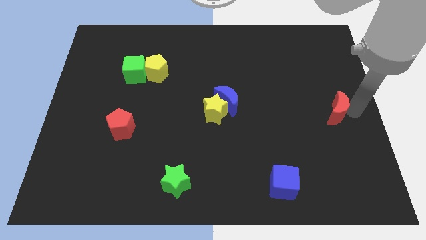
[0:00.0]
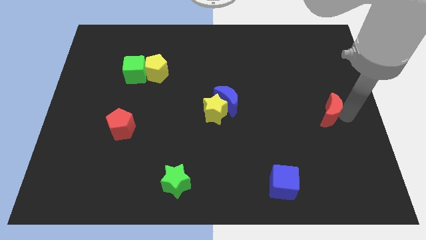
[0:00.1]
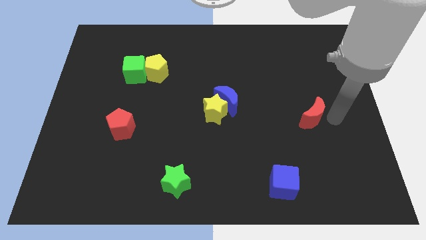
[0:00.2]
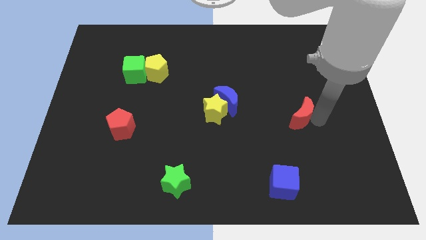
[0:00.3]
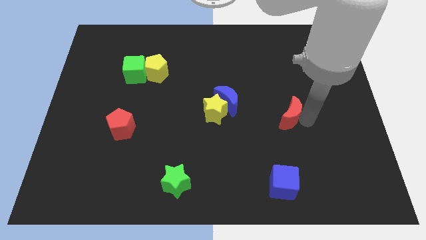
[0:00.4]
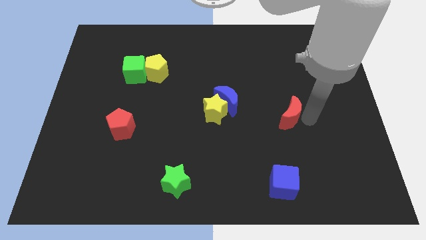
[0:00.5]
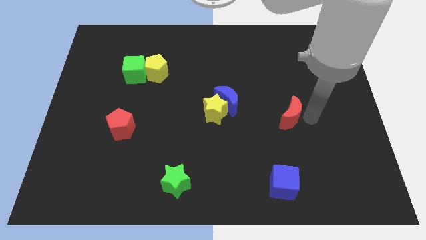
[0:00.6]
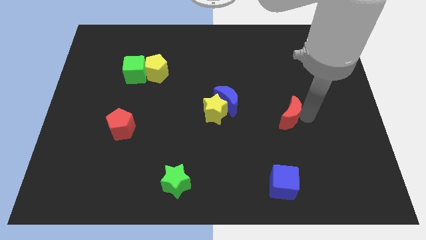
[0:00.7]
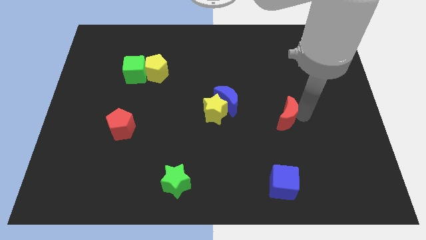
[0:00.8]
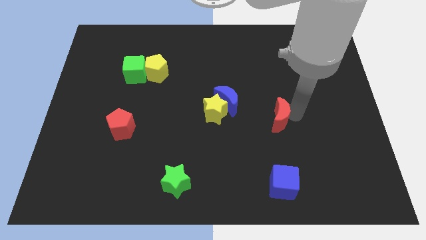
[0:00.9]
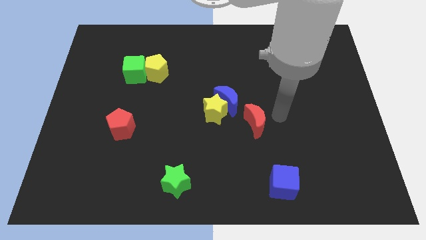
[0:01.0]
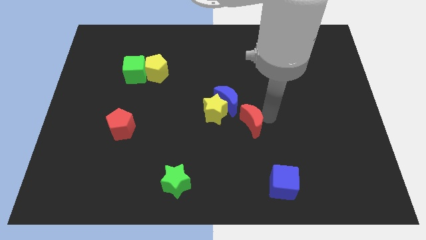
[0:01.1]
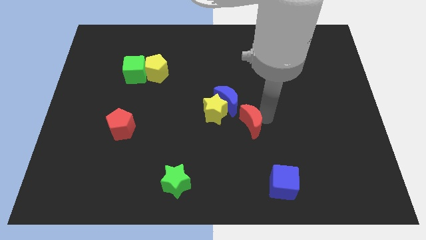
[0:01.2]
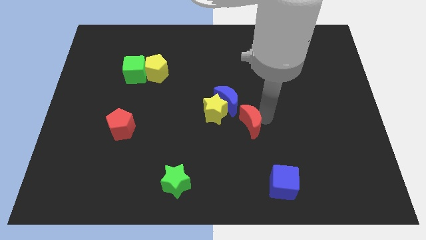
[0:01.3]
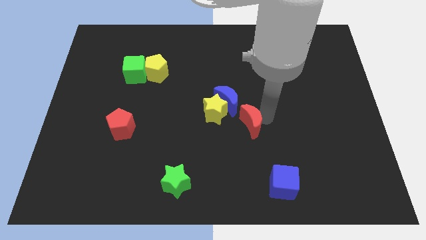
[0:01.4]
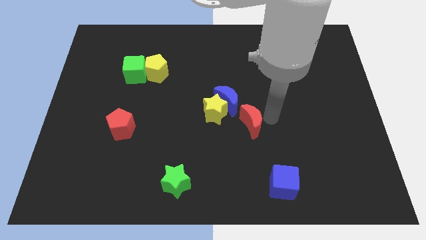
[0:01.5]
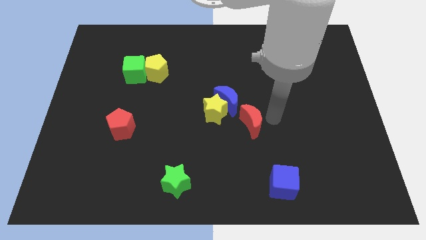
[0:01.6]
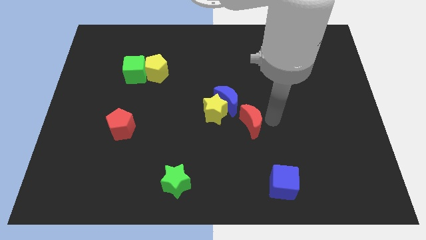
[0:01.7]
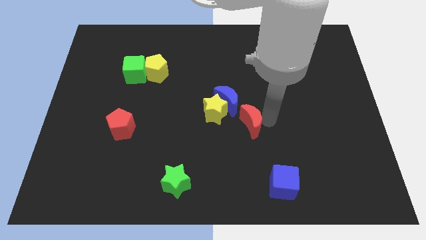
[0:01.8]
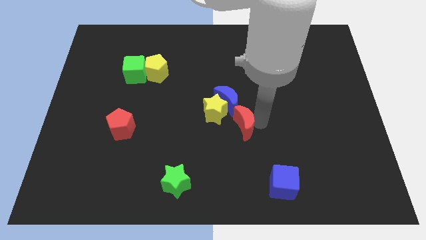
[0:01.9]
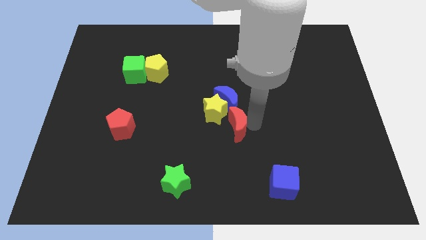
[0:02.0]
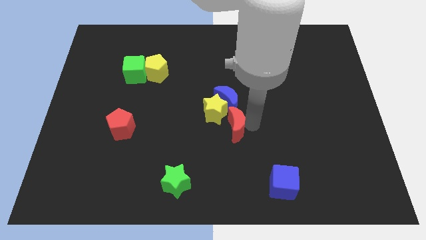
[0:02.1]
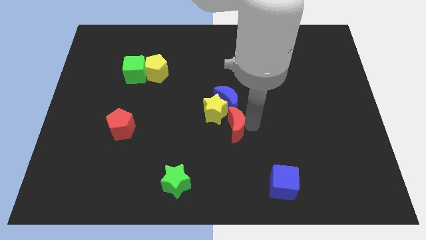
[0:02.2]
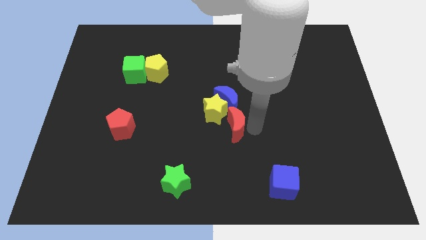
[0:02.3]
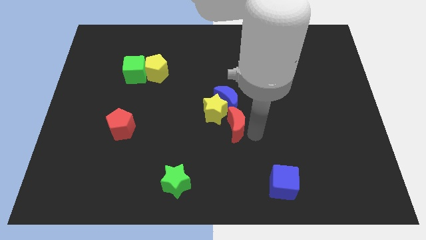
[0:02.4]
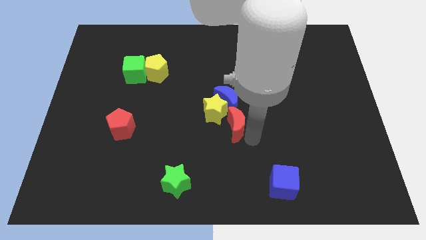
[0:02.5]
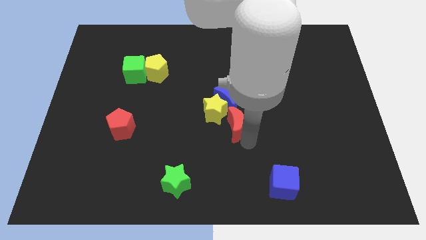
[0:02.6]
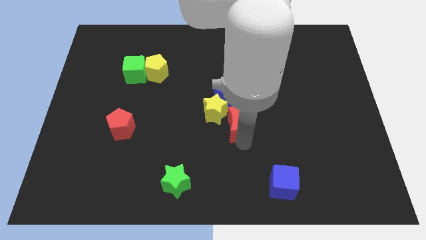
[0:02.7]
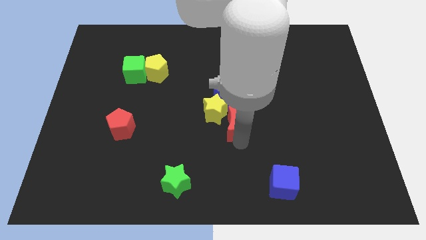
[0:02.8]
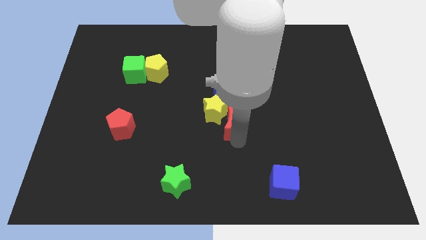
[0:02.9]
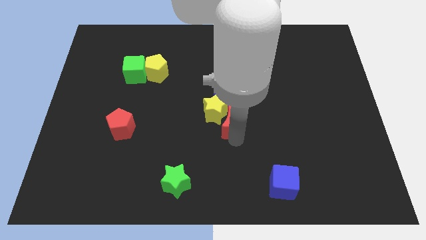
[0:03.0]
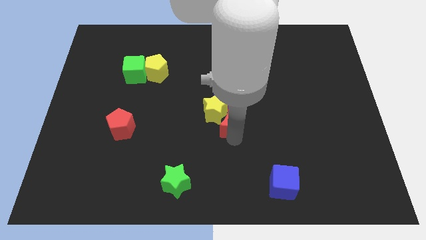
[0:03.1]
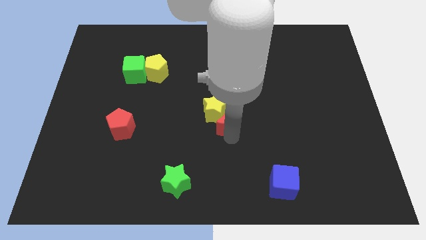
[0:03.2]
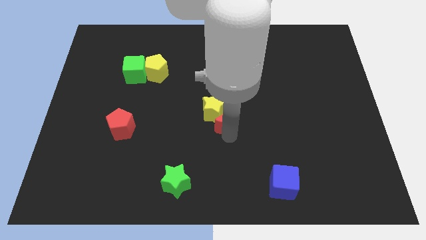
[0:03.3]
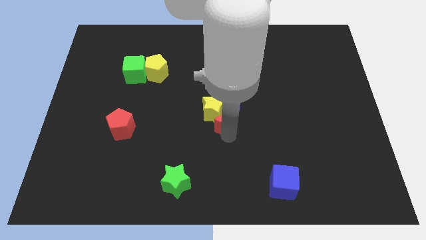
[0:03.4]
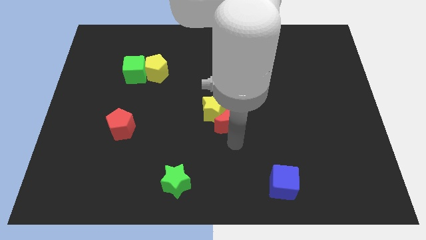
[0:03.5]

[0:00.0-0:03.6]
place the red moon into the yellow star at the center

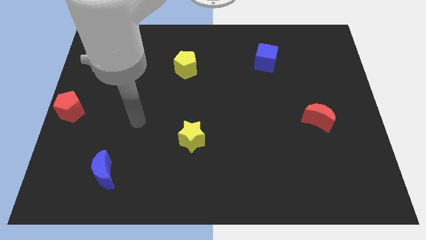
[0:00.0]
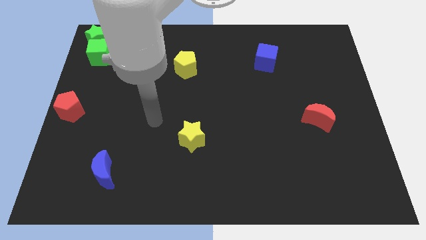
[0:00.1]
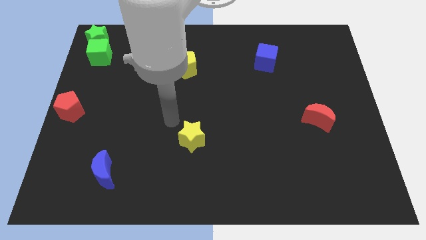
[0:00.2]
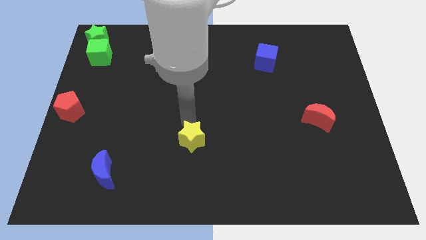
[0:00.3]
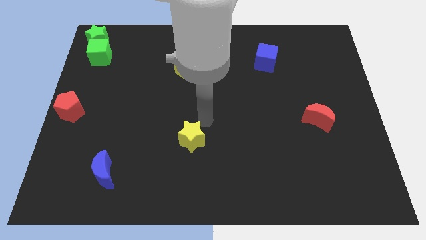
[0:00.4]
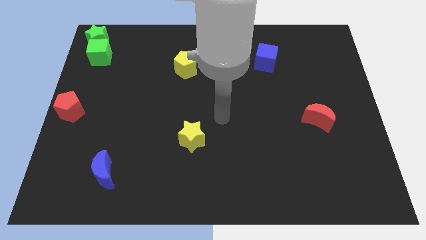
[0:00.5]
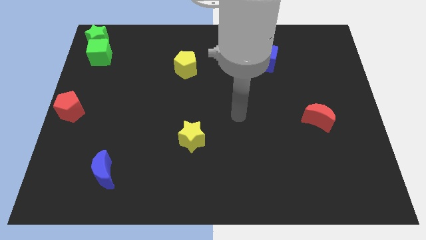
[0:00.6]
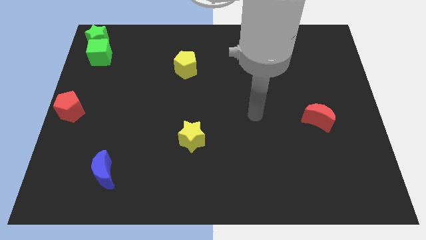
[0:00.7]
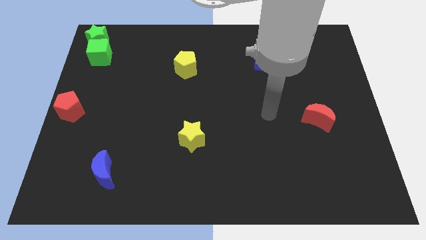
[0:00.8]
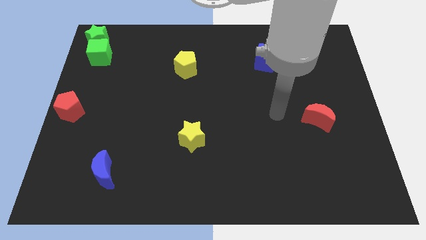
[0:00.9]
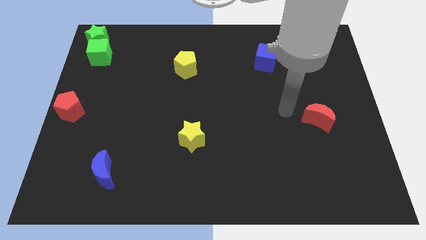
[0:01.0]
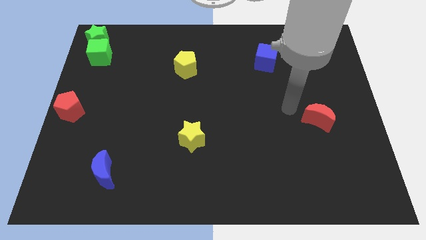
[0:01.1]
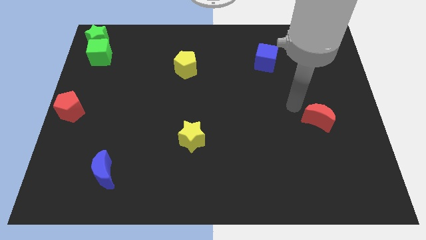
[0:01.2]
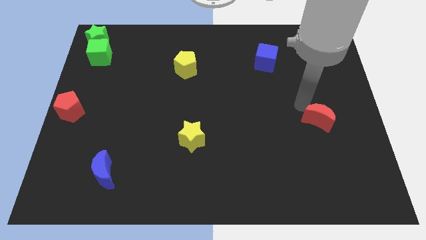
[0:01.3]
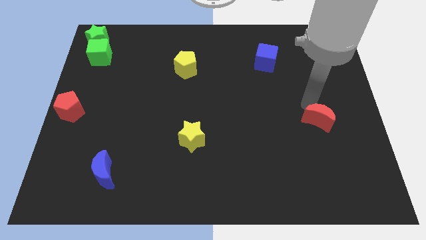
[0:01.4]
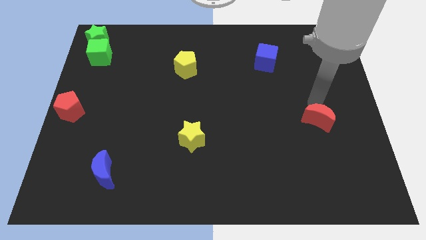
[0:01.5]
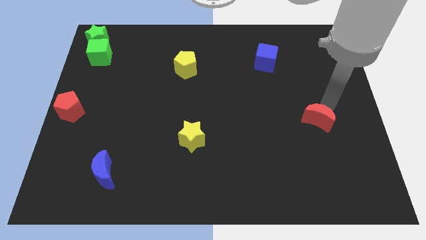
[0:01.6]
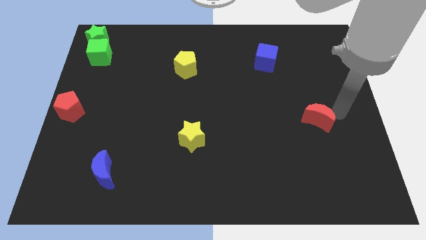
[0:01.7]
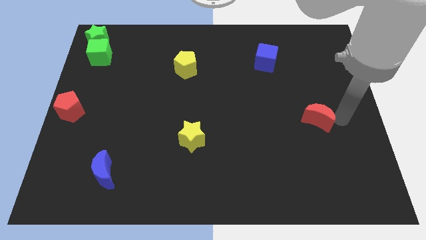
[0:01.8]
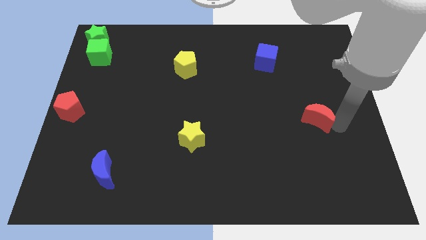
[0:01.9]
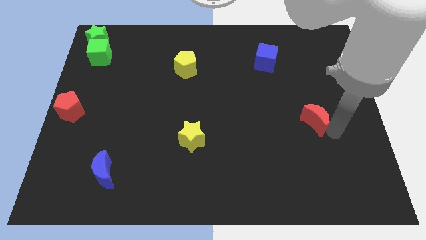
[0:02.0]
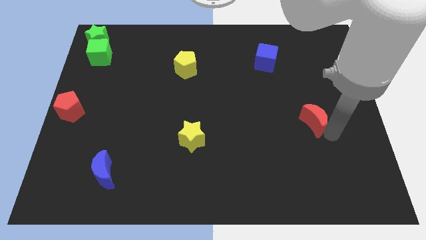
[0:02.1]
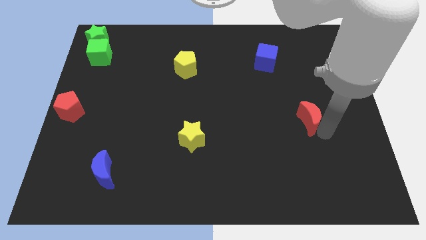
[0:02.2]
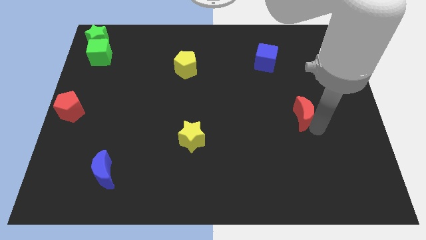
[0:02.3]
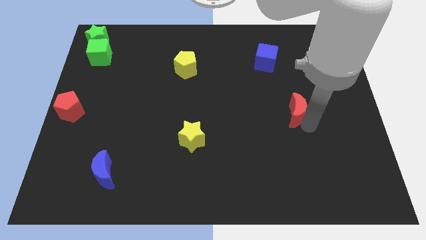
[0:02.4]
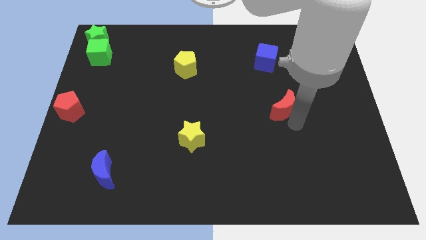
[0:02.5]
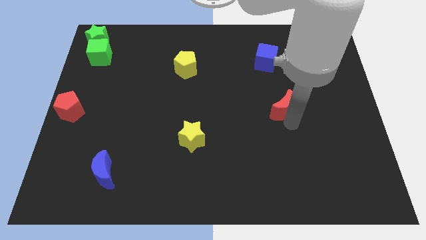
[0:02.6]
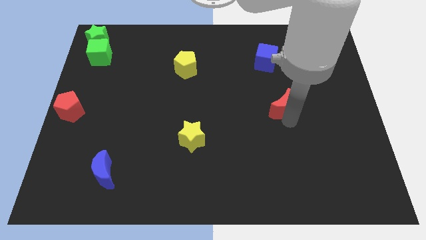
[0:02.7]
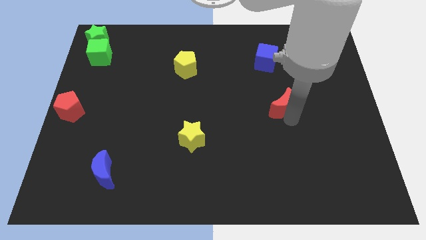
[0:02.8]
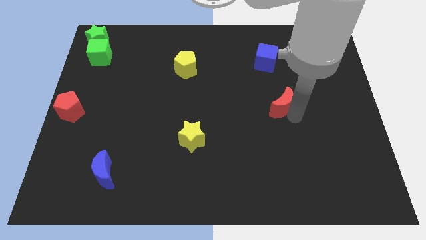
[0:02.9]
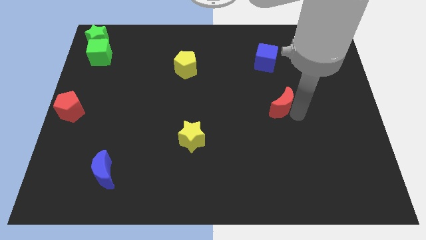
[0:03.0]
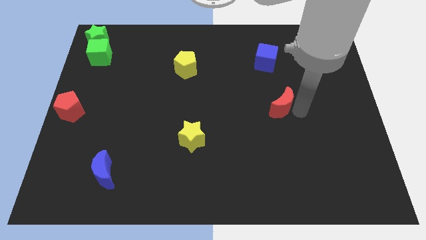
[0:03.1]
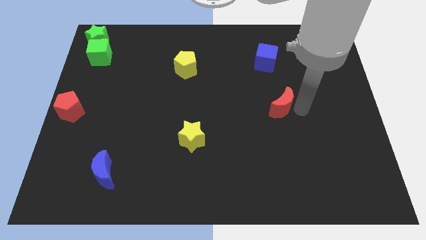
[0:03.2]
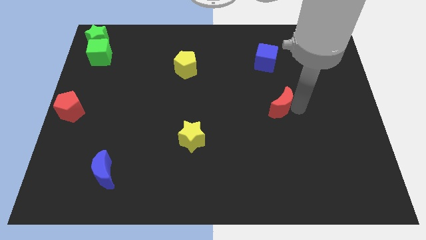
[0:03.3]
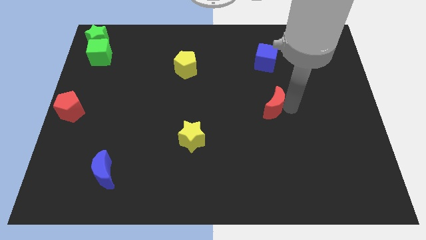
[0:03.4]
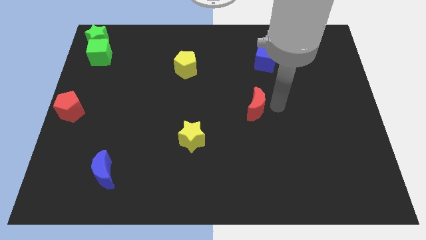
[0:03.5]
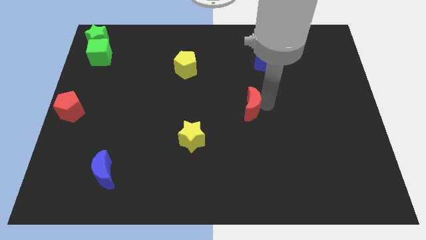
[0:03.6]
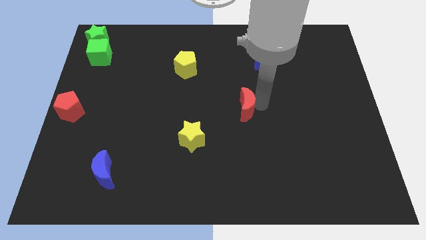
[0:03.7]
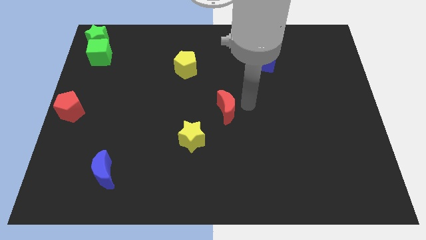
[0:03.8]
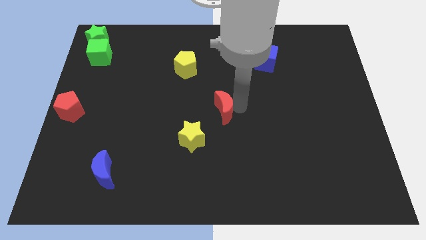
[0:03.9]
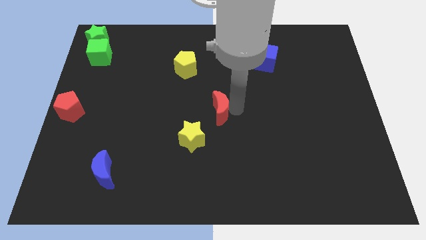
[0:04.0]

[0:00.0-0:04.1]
push the red crescent to the left of the board

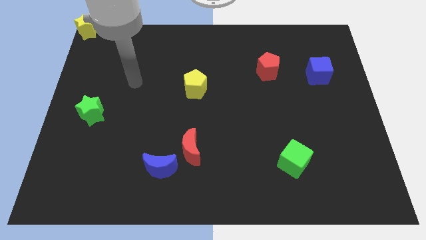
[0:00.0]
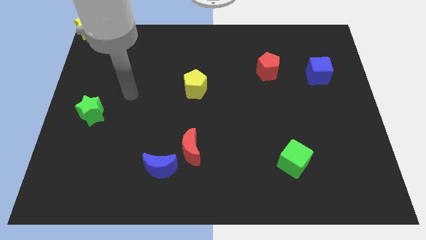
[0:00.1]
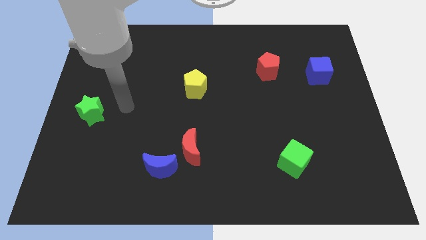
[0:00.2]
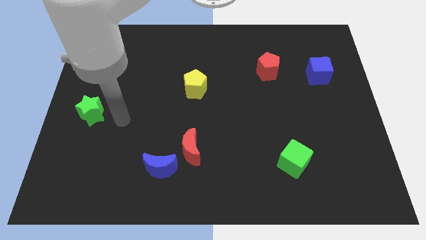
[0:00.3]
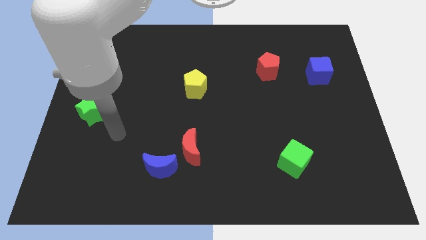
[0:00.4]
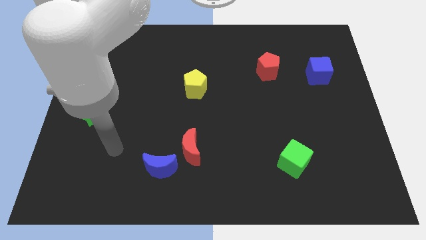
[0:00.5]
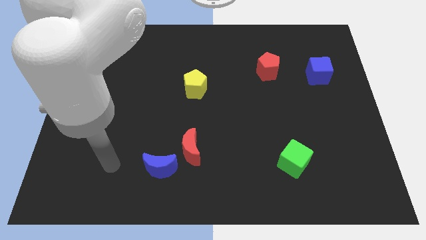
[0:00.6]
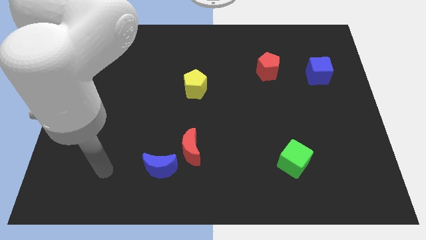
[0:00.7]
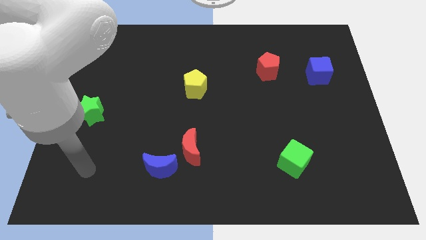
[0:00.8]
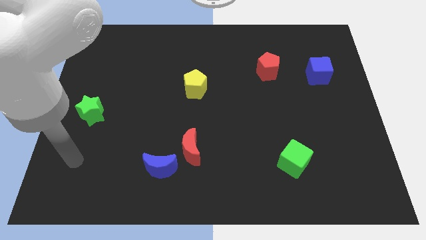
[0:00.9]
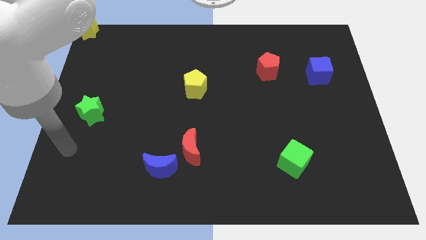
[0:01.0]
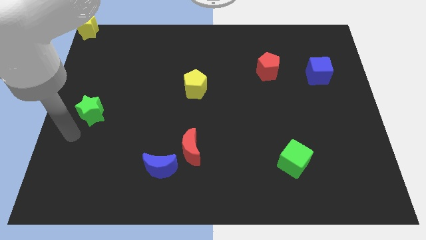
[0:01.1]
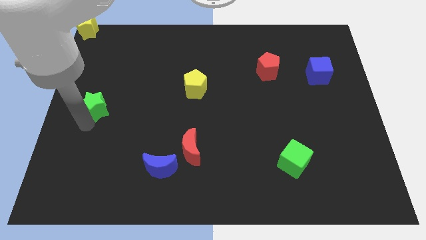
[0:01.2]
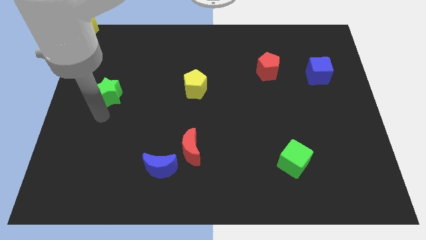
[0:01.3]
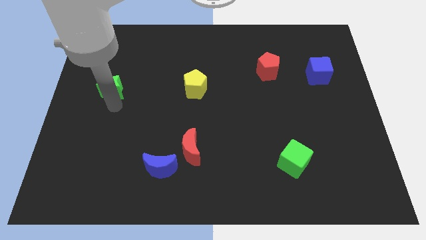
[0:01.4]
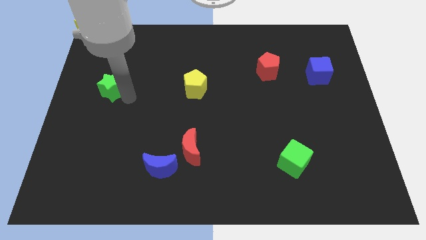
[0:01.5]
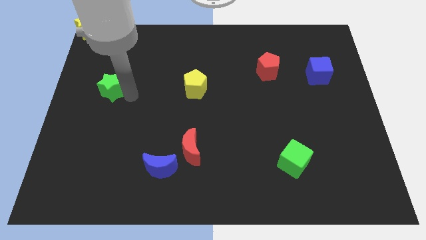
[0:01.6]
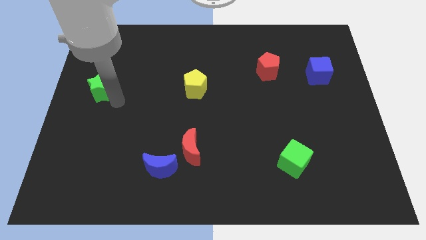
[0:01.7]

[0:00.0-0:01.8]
push green star to the left of yellow pentagon
